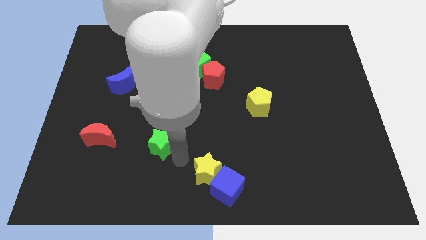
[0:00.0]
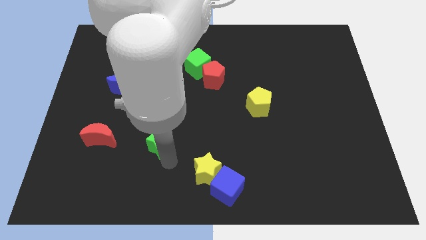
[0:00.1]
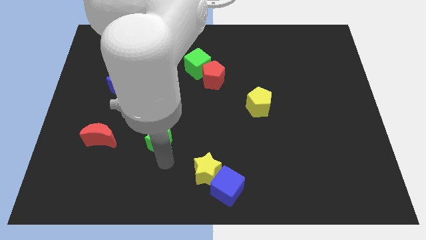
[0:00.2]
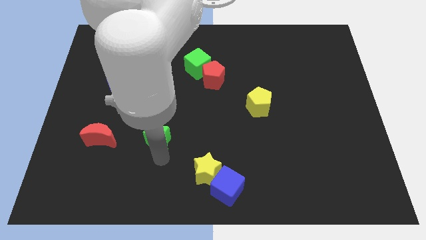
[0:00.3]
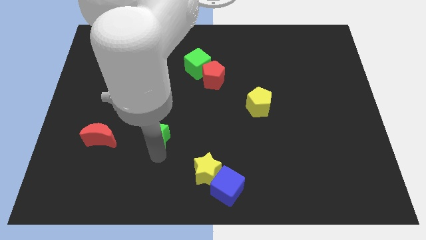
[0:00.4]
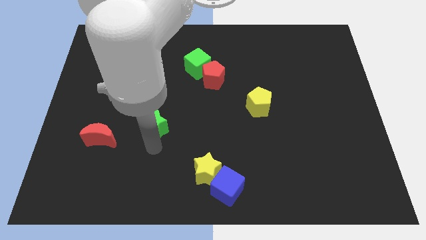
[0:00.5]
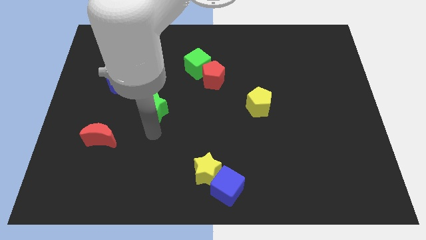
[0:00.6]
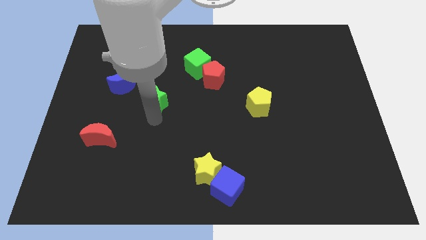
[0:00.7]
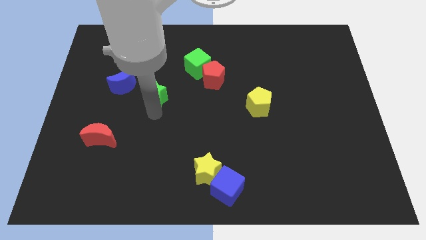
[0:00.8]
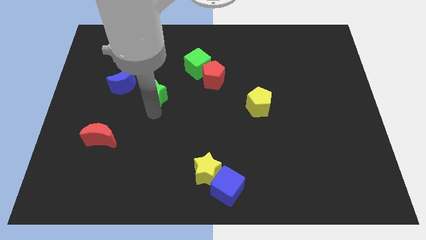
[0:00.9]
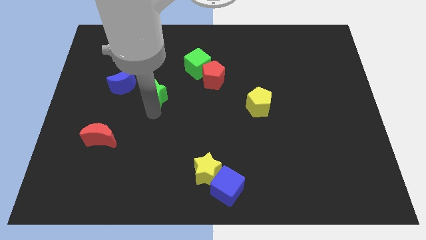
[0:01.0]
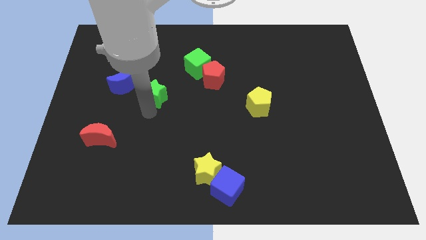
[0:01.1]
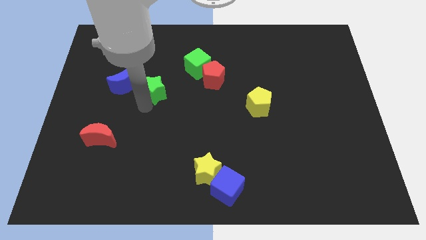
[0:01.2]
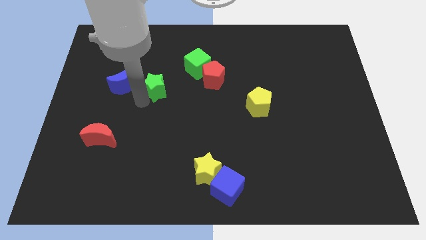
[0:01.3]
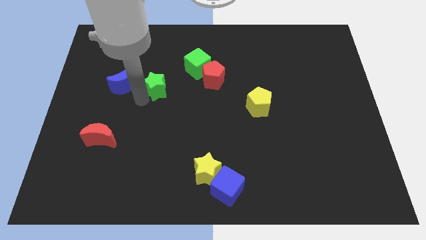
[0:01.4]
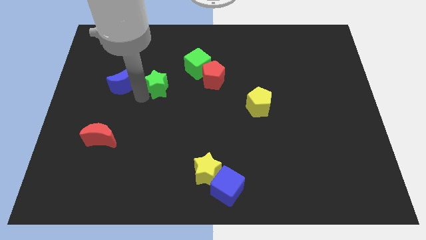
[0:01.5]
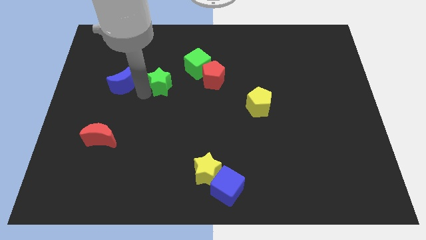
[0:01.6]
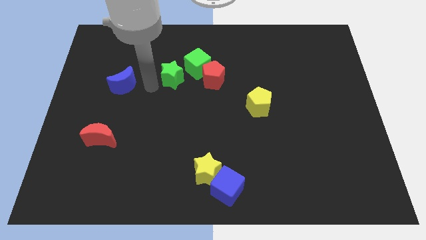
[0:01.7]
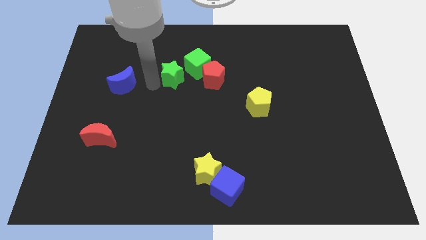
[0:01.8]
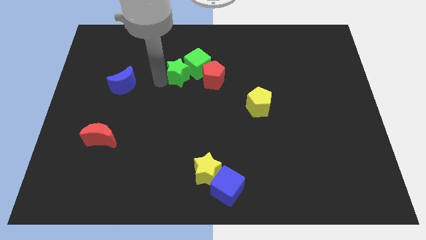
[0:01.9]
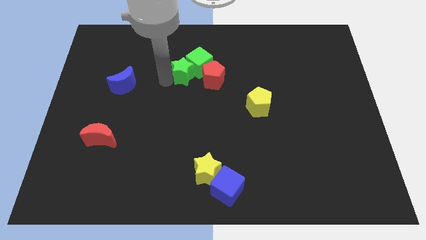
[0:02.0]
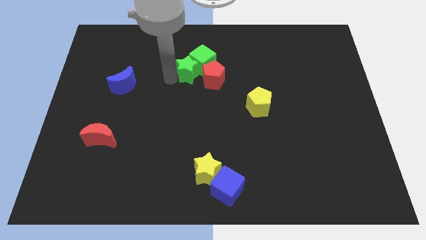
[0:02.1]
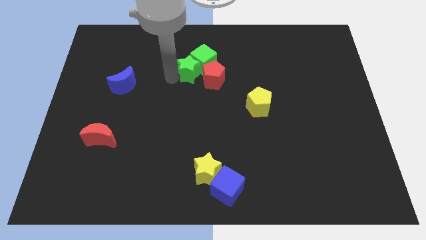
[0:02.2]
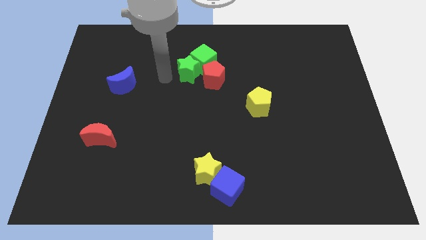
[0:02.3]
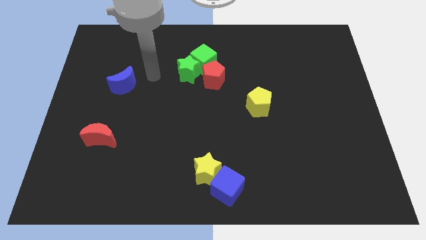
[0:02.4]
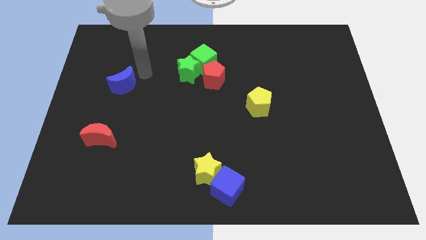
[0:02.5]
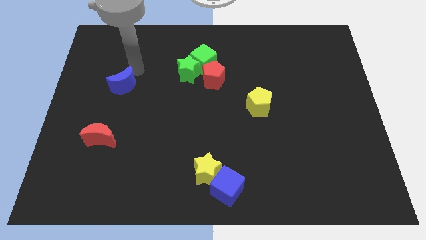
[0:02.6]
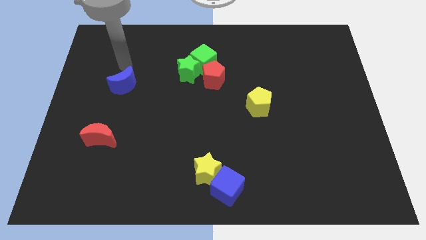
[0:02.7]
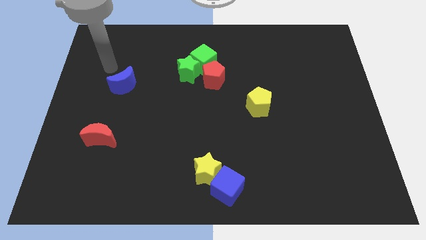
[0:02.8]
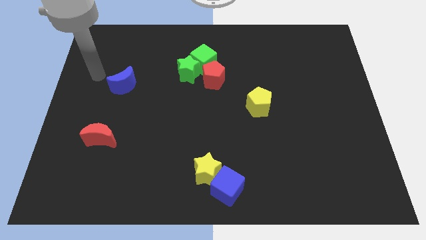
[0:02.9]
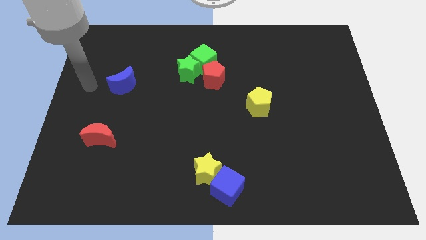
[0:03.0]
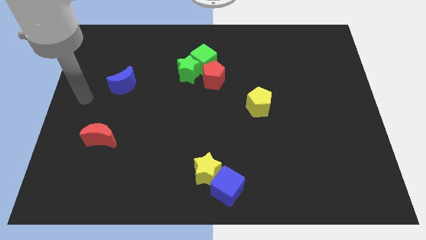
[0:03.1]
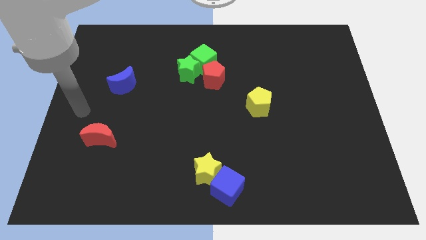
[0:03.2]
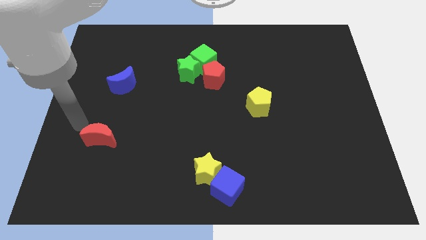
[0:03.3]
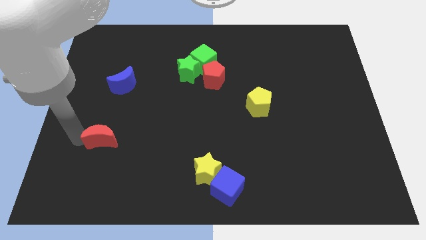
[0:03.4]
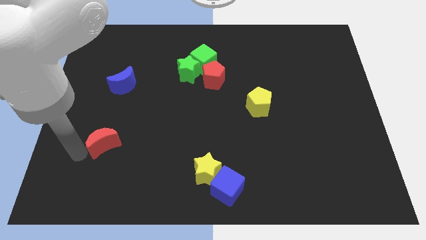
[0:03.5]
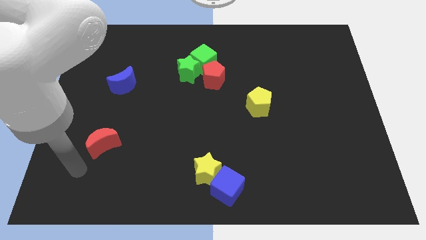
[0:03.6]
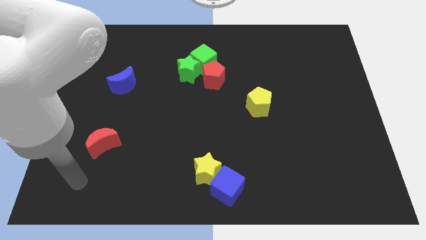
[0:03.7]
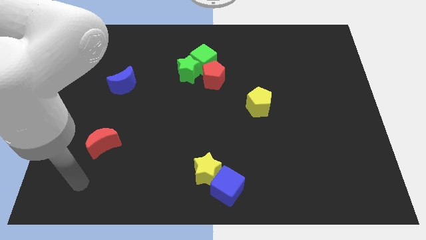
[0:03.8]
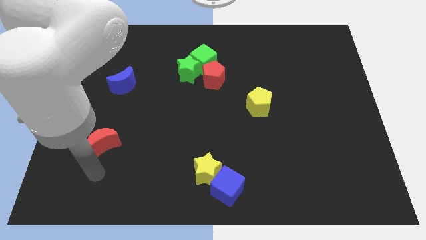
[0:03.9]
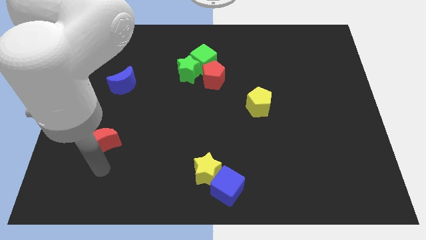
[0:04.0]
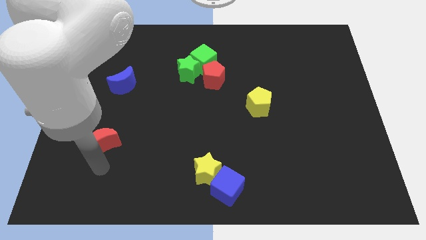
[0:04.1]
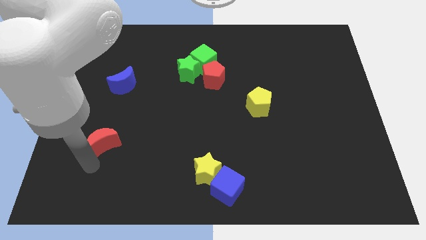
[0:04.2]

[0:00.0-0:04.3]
move the green star into the green cube

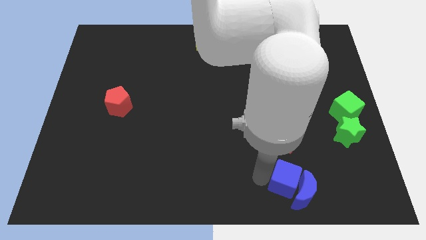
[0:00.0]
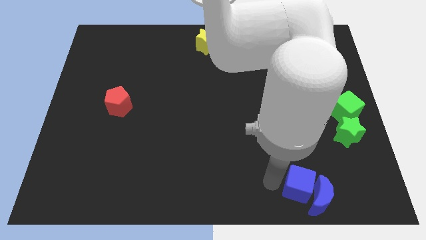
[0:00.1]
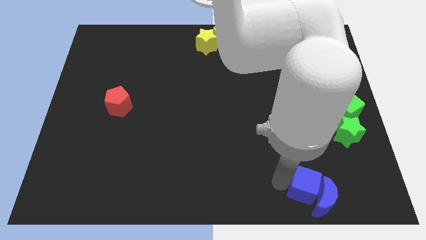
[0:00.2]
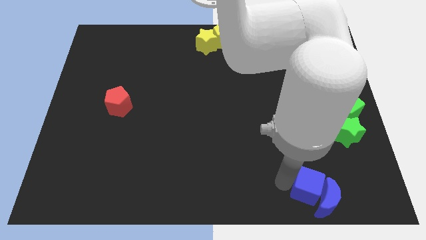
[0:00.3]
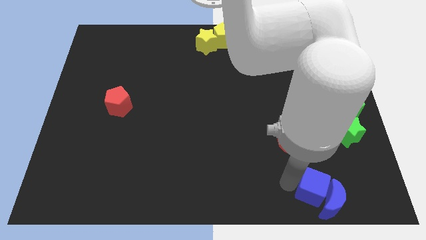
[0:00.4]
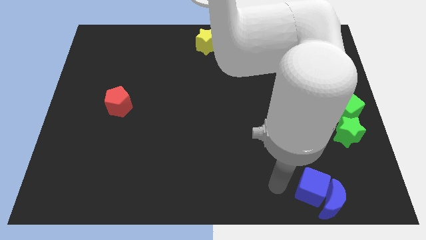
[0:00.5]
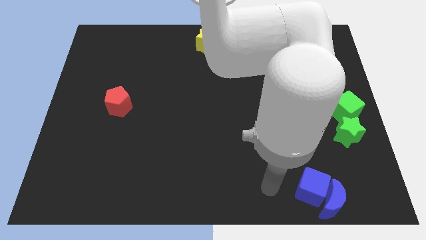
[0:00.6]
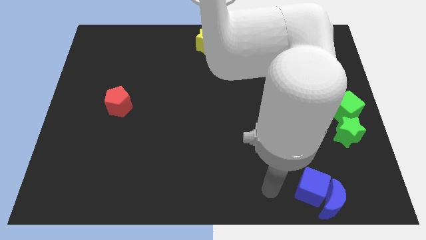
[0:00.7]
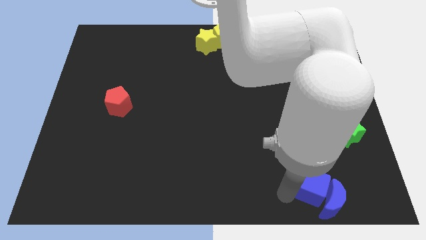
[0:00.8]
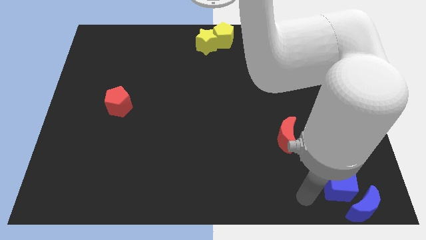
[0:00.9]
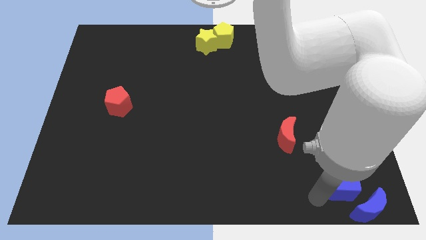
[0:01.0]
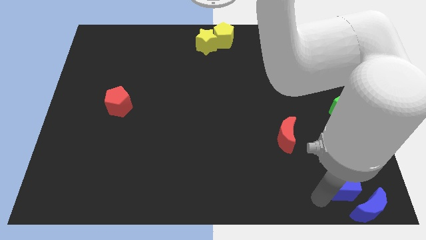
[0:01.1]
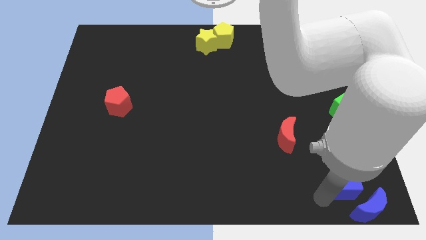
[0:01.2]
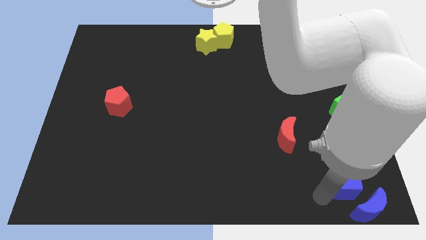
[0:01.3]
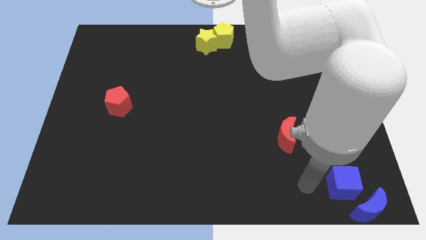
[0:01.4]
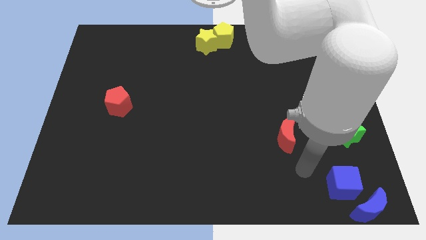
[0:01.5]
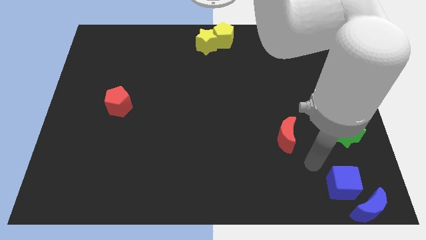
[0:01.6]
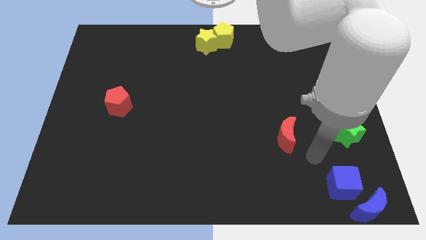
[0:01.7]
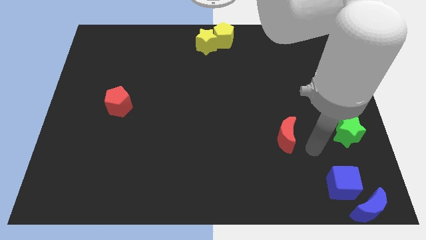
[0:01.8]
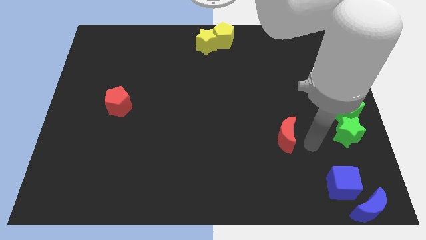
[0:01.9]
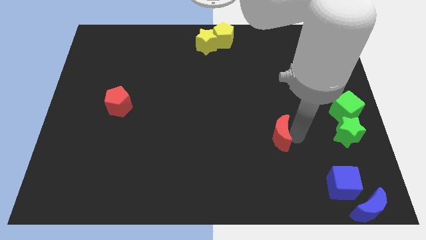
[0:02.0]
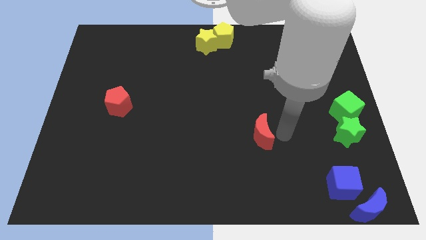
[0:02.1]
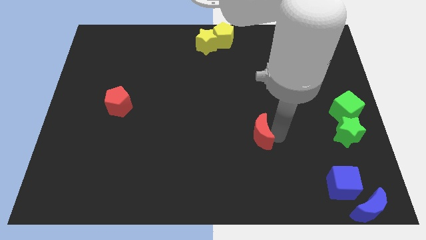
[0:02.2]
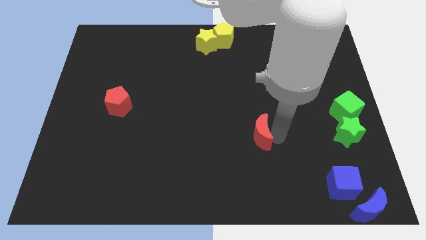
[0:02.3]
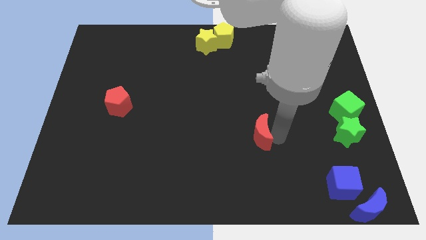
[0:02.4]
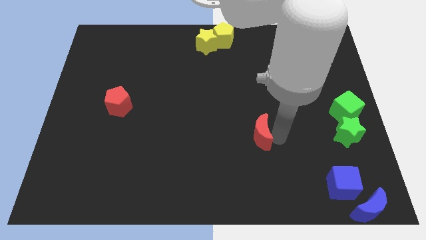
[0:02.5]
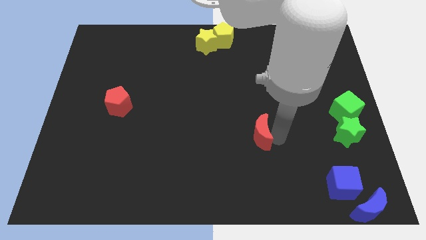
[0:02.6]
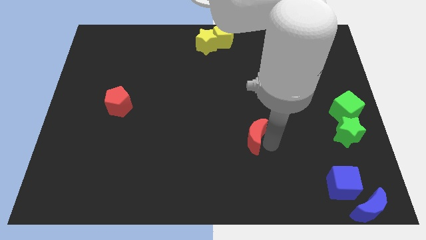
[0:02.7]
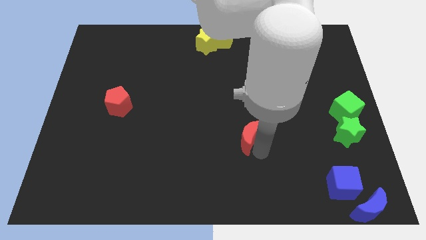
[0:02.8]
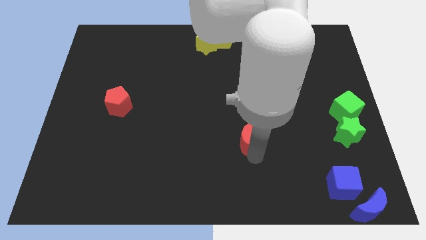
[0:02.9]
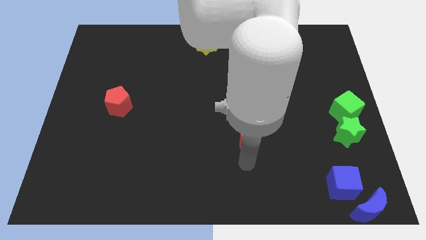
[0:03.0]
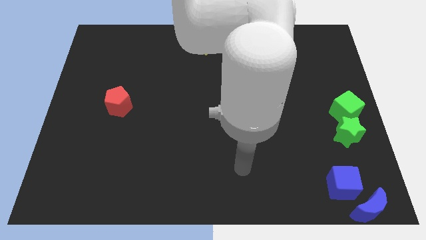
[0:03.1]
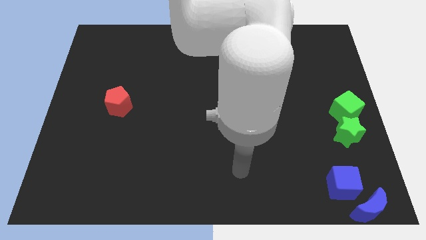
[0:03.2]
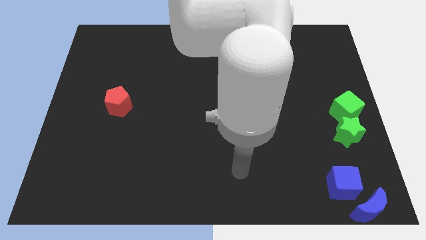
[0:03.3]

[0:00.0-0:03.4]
move blue moon and blue cube to the bottom

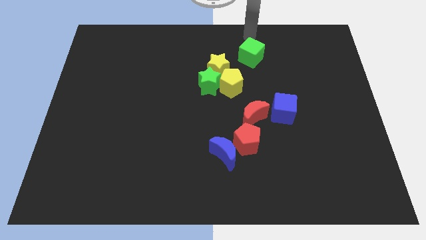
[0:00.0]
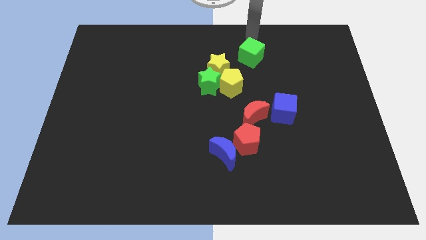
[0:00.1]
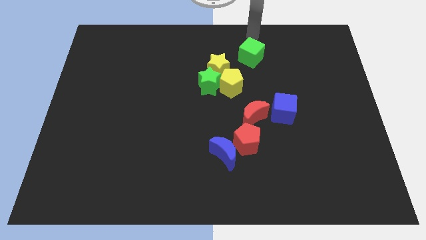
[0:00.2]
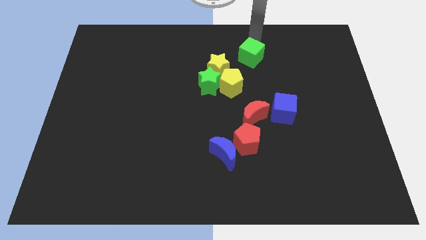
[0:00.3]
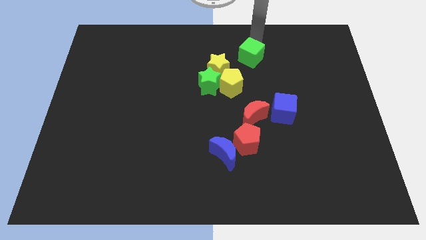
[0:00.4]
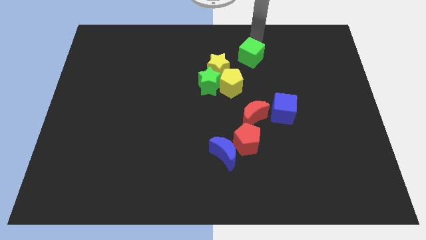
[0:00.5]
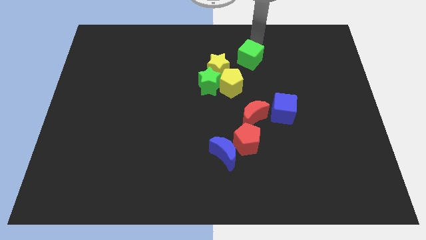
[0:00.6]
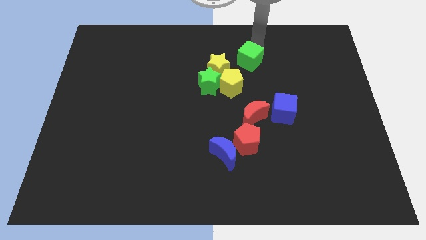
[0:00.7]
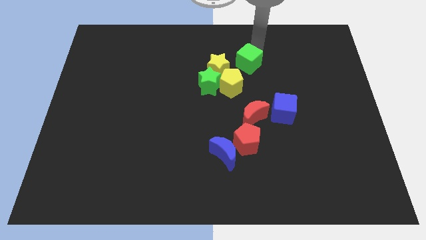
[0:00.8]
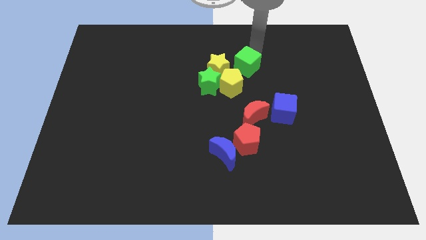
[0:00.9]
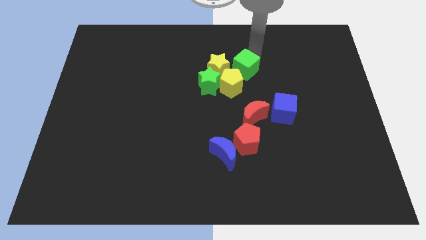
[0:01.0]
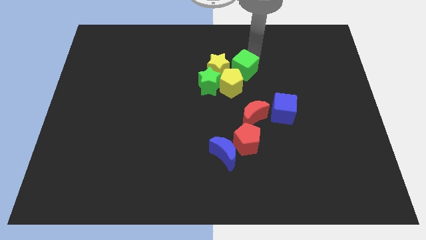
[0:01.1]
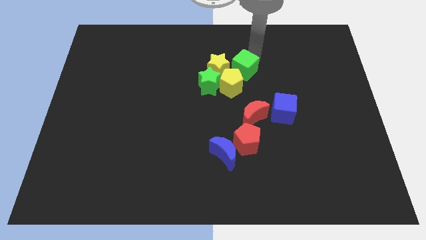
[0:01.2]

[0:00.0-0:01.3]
move the green cube close to the yellow blocks
